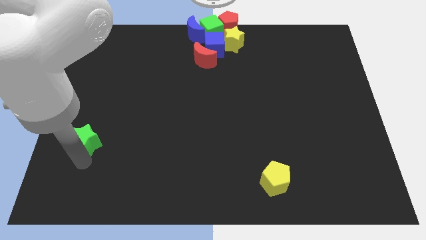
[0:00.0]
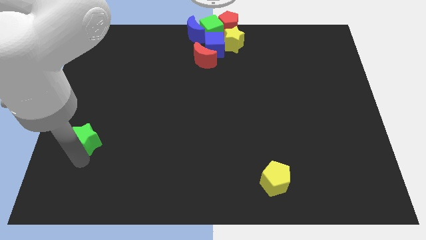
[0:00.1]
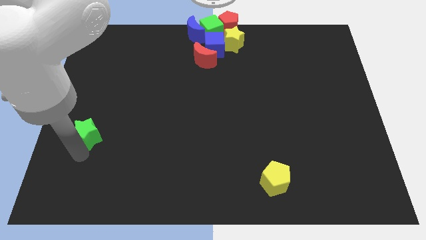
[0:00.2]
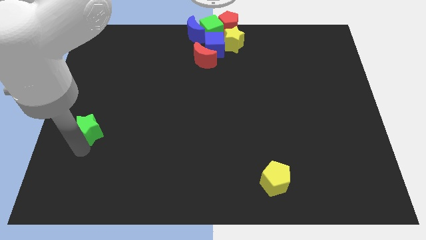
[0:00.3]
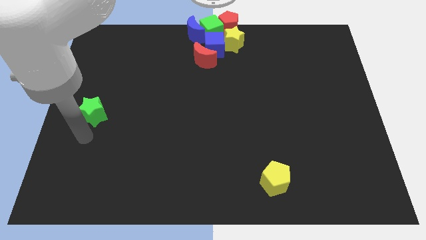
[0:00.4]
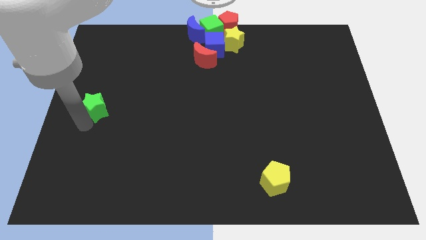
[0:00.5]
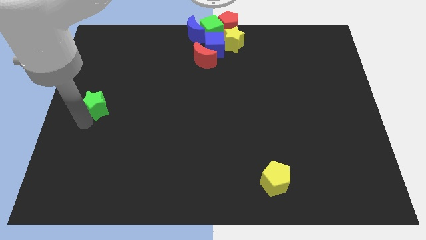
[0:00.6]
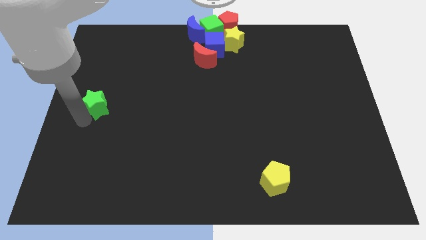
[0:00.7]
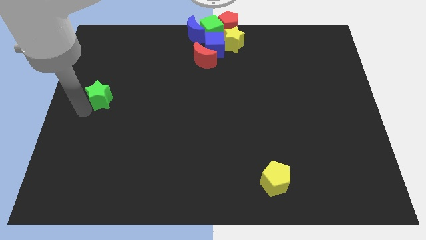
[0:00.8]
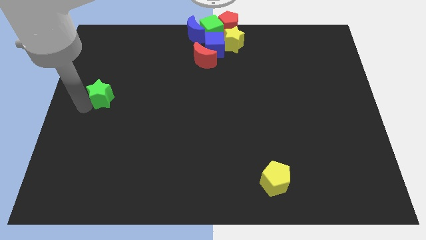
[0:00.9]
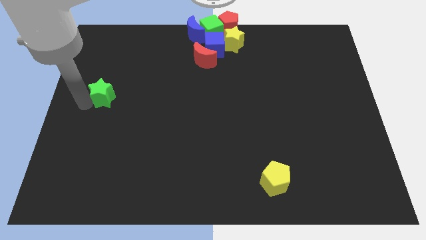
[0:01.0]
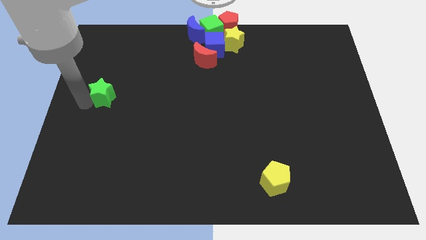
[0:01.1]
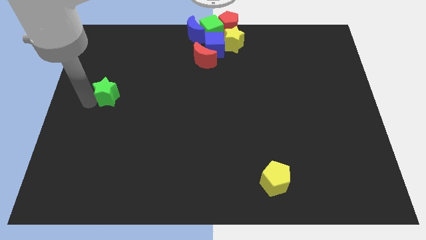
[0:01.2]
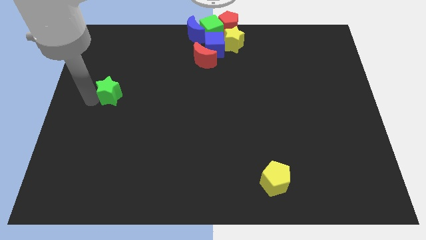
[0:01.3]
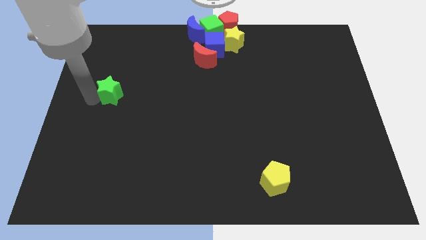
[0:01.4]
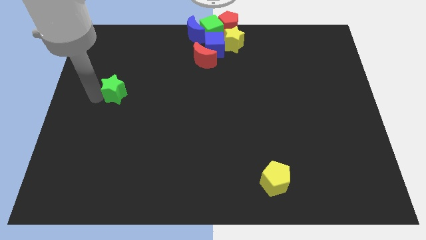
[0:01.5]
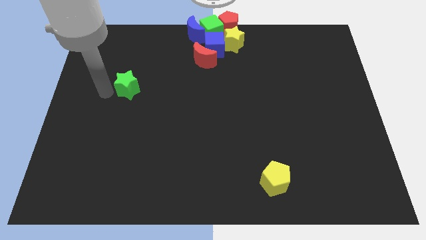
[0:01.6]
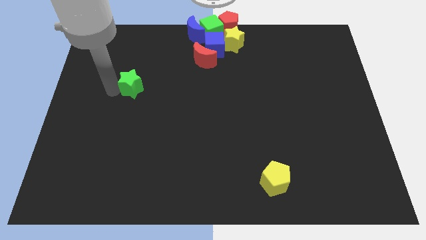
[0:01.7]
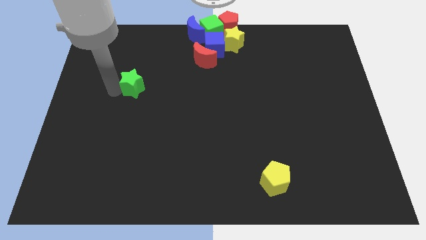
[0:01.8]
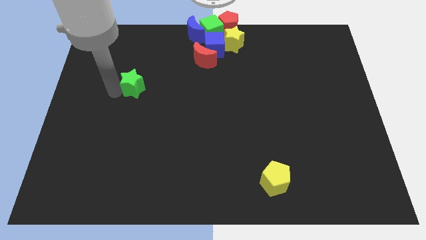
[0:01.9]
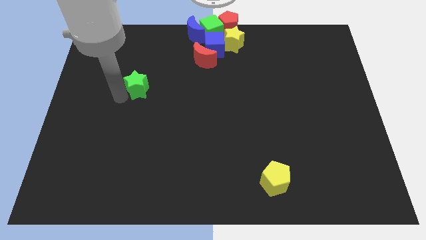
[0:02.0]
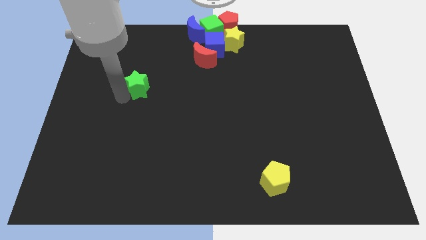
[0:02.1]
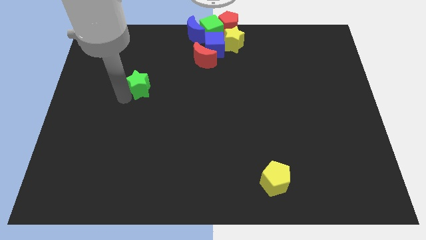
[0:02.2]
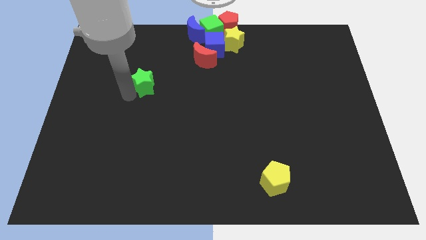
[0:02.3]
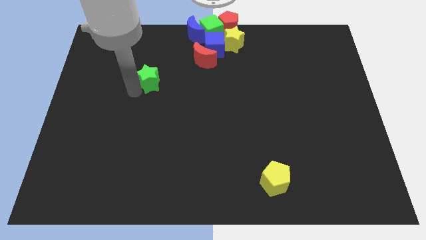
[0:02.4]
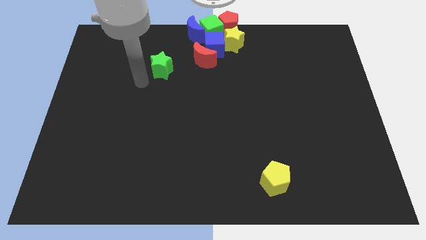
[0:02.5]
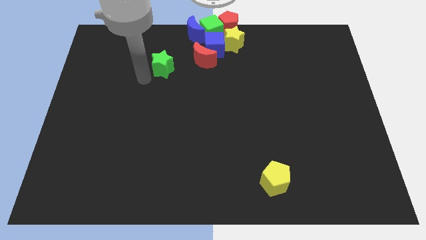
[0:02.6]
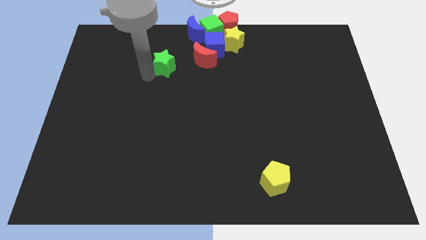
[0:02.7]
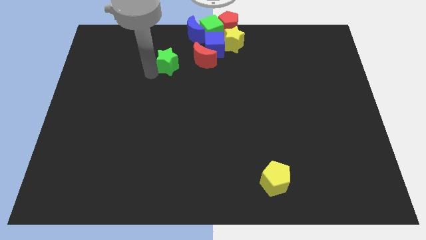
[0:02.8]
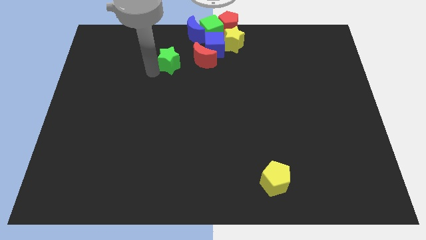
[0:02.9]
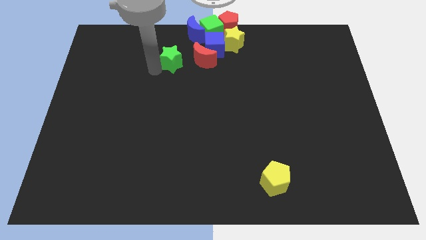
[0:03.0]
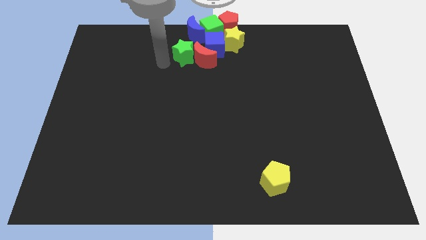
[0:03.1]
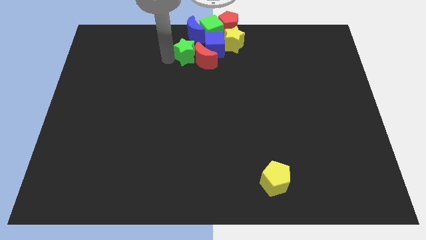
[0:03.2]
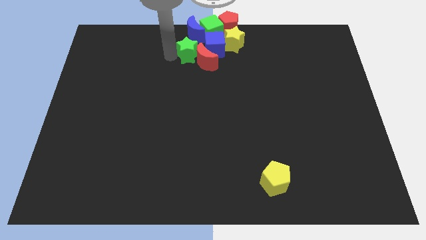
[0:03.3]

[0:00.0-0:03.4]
push the green star into a group of blocks

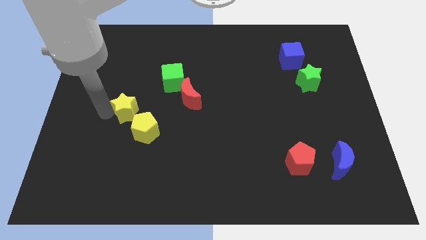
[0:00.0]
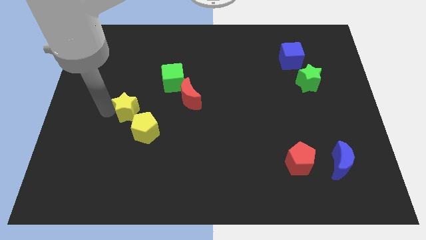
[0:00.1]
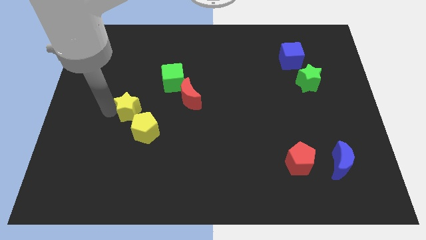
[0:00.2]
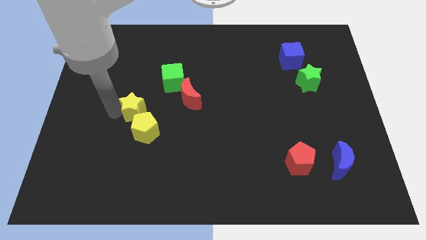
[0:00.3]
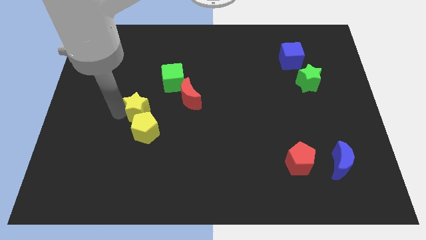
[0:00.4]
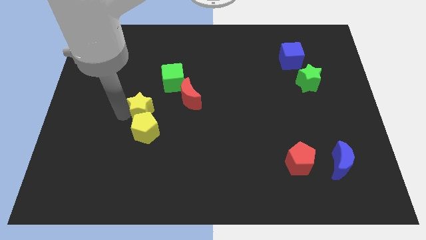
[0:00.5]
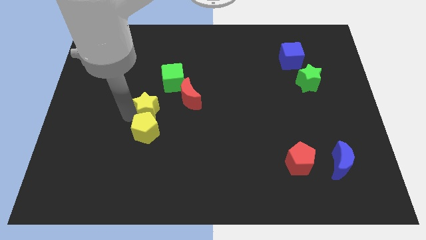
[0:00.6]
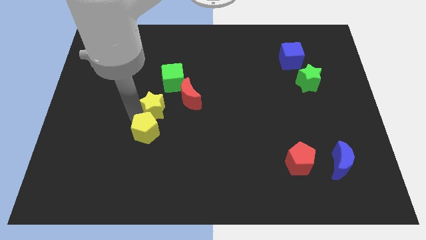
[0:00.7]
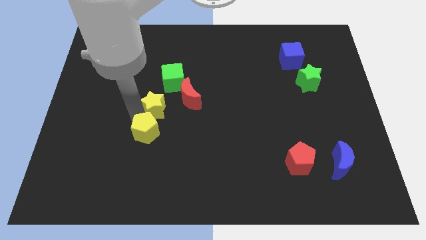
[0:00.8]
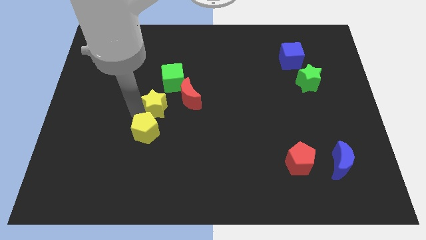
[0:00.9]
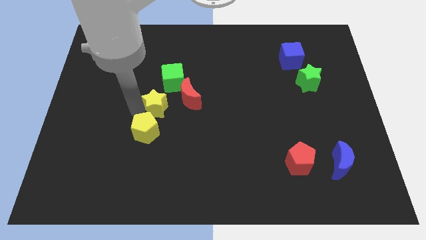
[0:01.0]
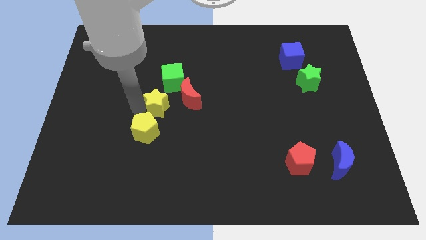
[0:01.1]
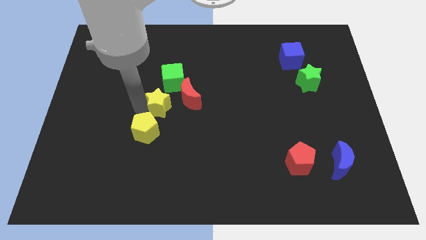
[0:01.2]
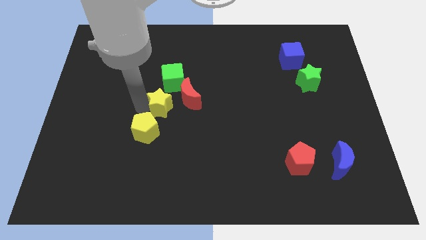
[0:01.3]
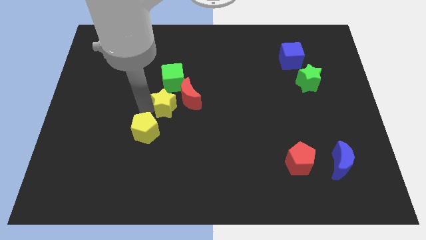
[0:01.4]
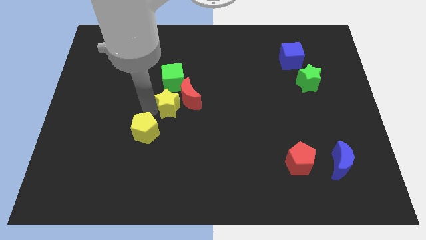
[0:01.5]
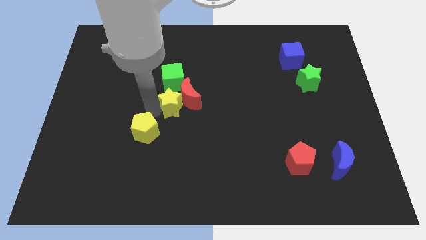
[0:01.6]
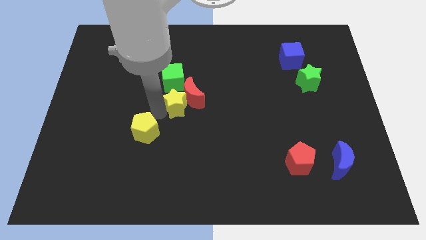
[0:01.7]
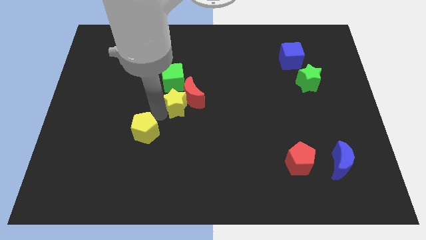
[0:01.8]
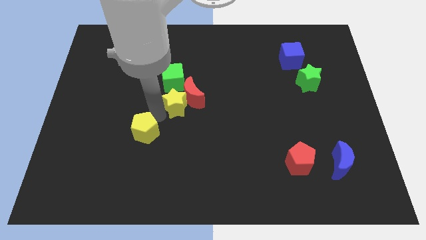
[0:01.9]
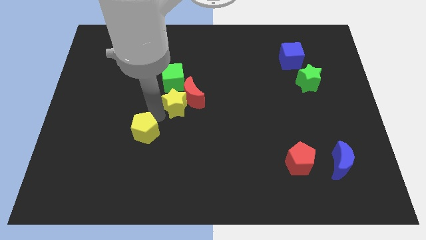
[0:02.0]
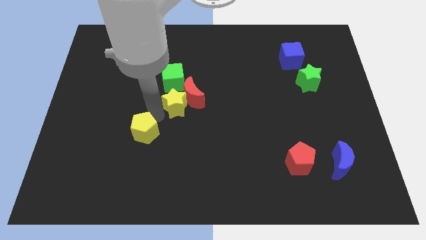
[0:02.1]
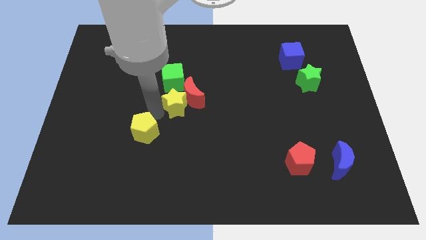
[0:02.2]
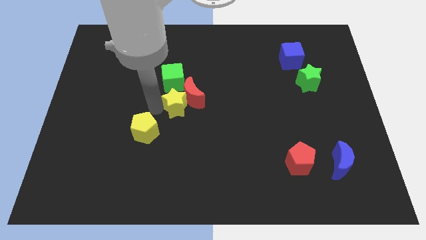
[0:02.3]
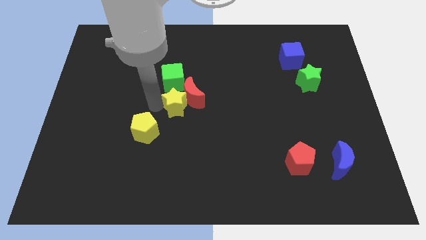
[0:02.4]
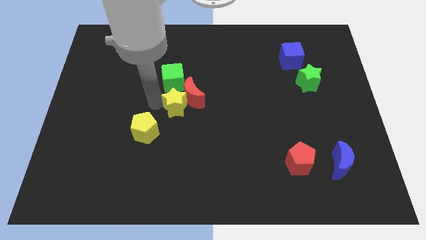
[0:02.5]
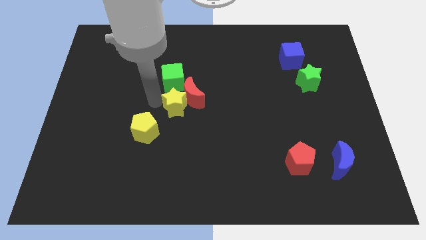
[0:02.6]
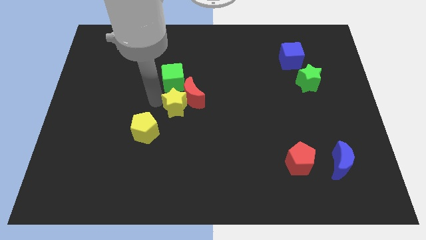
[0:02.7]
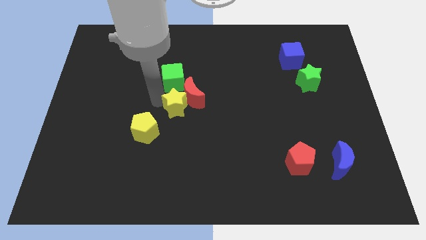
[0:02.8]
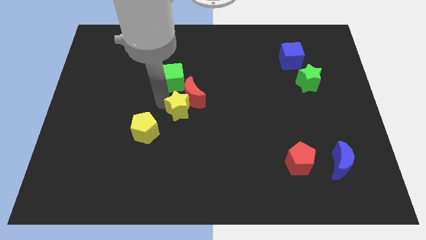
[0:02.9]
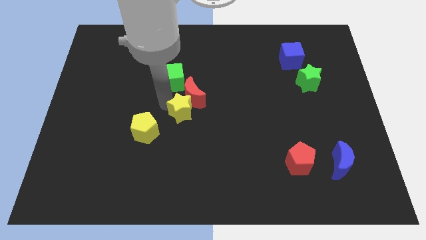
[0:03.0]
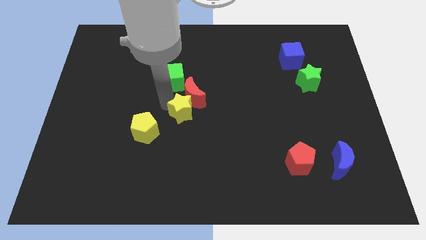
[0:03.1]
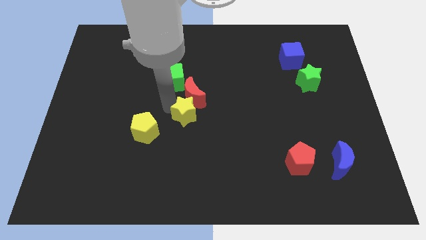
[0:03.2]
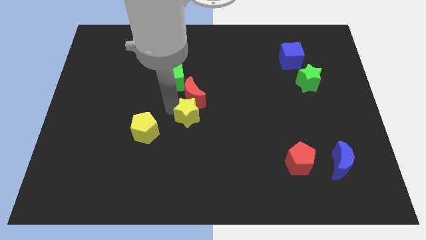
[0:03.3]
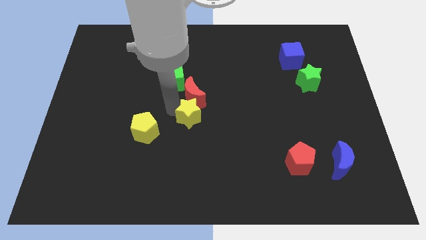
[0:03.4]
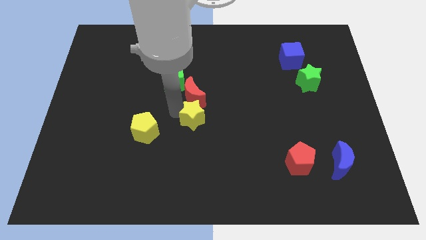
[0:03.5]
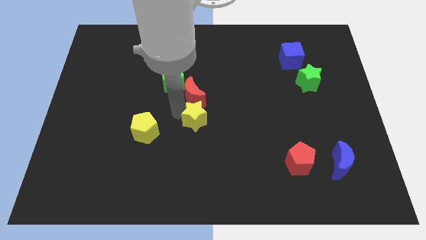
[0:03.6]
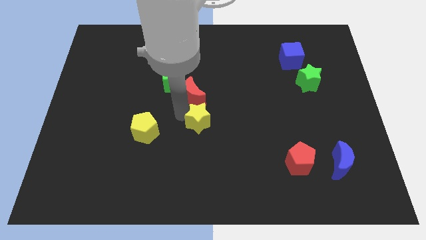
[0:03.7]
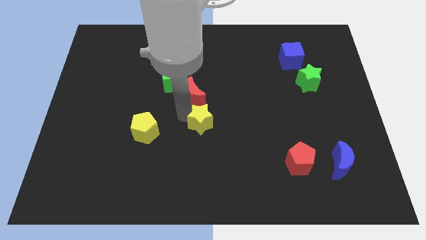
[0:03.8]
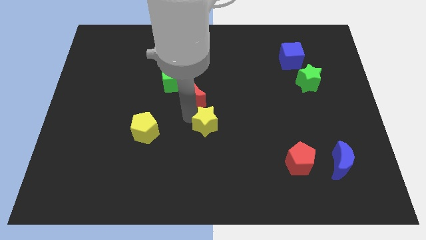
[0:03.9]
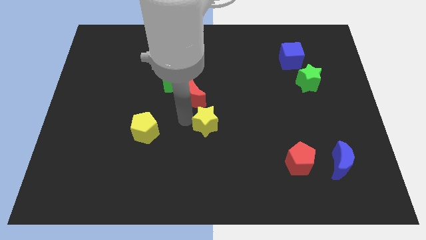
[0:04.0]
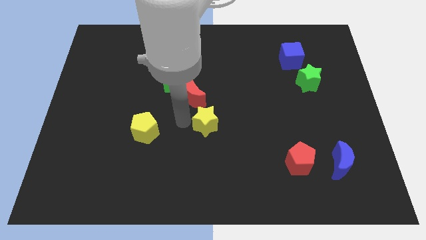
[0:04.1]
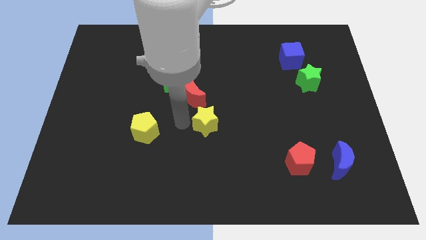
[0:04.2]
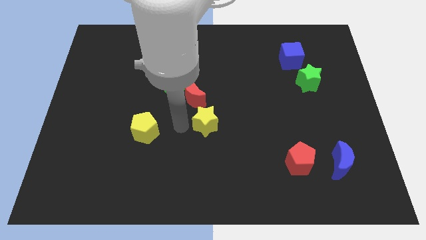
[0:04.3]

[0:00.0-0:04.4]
slide the yellow star to the bottom right of red moon

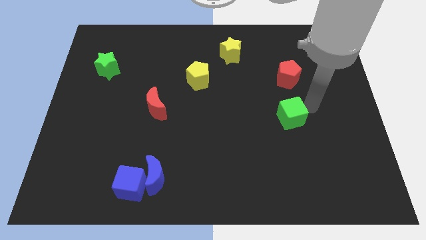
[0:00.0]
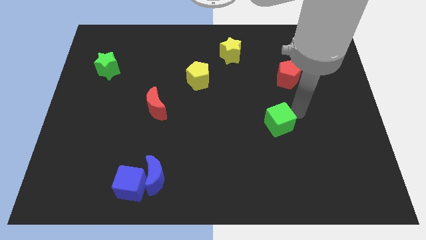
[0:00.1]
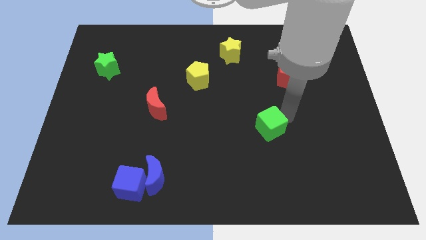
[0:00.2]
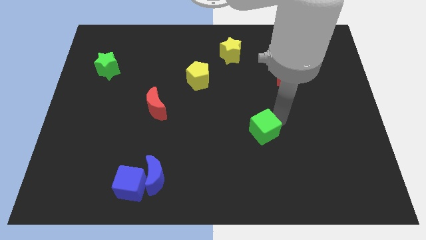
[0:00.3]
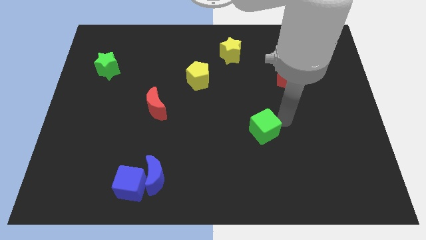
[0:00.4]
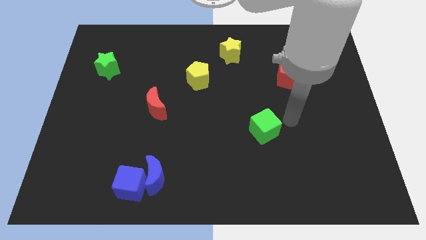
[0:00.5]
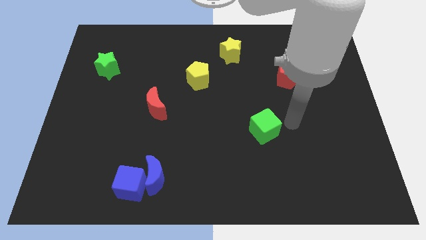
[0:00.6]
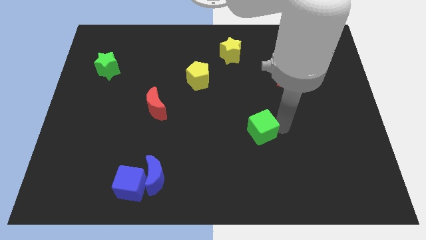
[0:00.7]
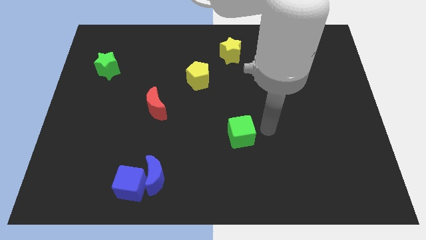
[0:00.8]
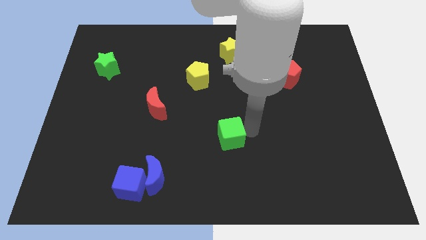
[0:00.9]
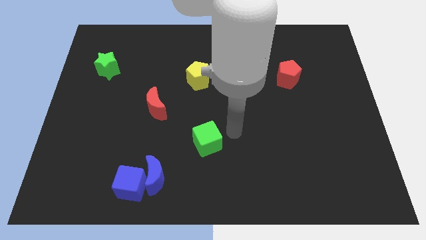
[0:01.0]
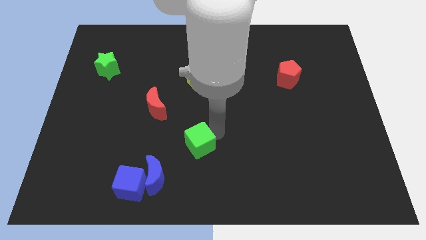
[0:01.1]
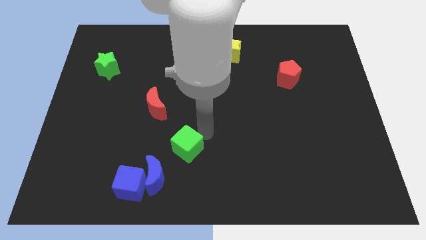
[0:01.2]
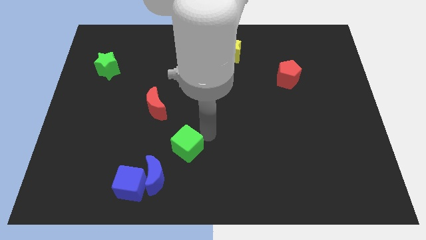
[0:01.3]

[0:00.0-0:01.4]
move the green cube to the top right of the blue crescent
